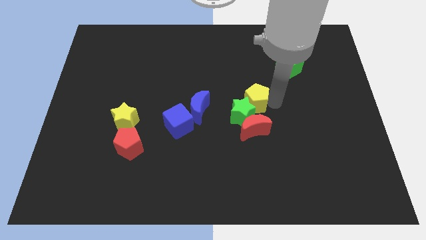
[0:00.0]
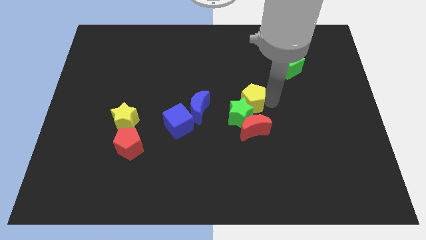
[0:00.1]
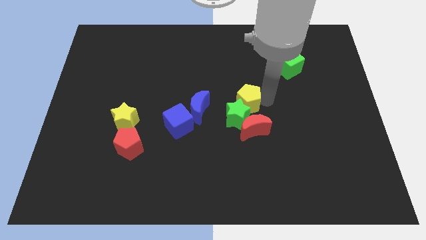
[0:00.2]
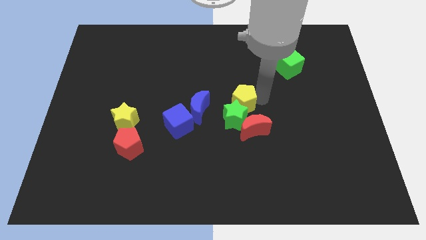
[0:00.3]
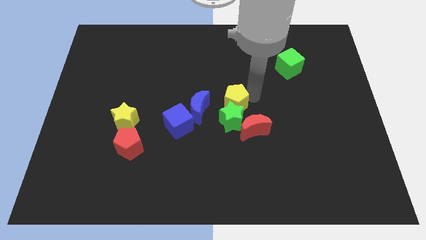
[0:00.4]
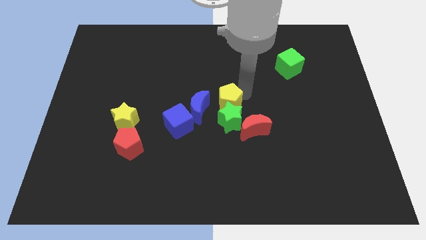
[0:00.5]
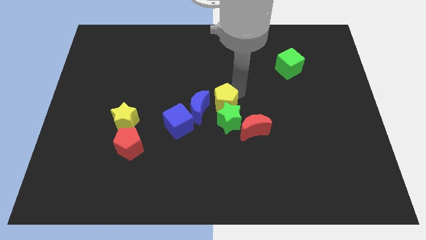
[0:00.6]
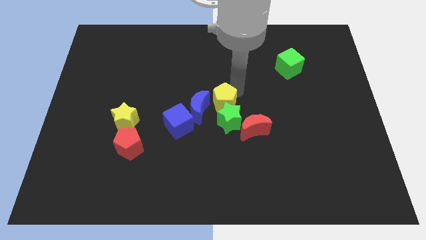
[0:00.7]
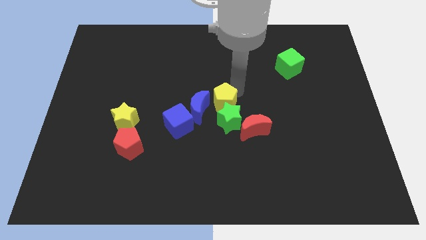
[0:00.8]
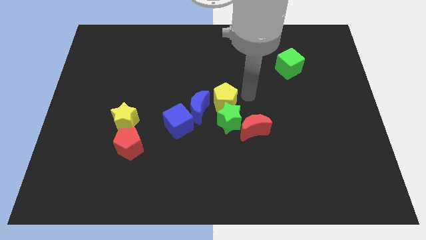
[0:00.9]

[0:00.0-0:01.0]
place the yellow pentagon close to the blue crescent

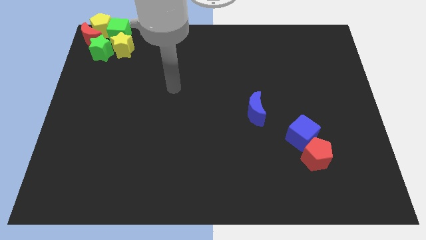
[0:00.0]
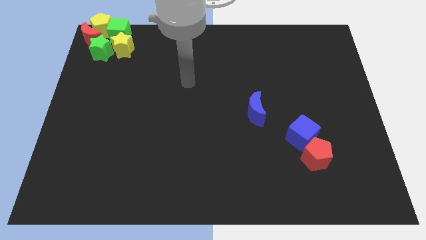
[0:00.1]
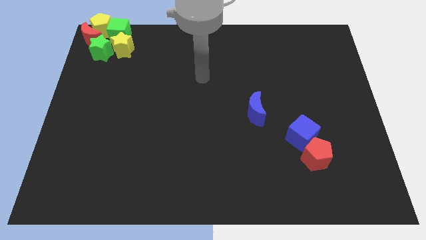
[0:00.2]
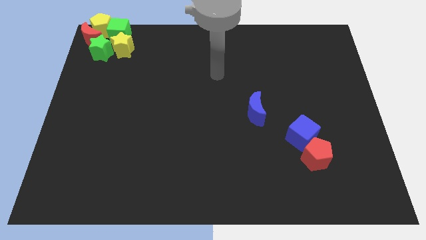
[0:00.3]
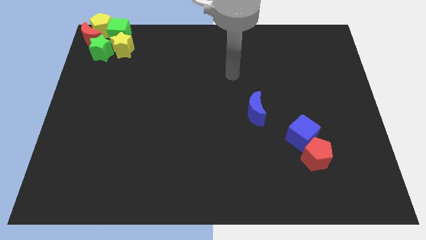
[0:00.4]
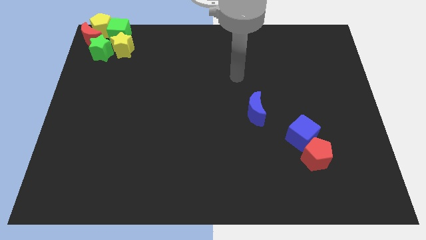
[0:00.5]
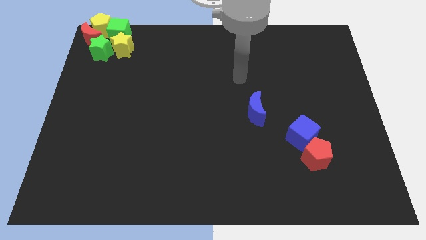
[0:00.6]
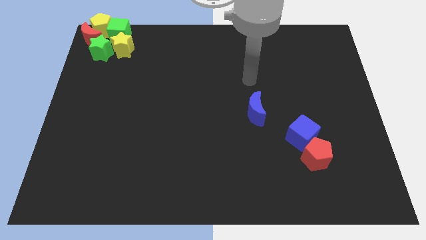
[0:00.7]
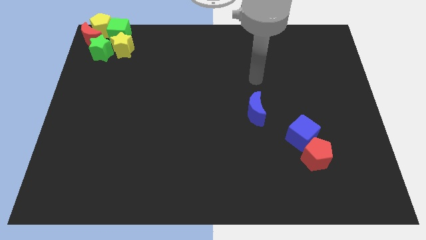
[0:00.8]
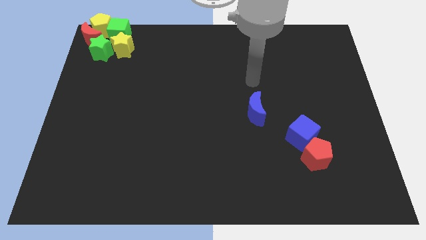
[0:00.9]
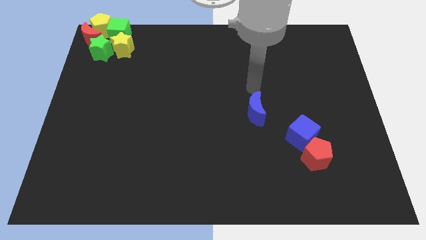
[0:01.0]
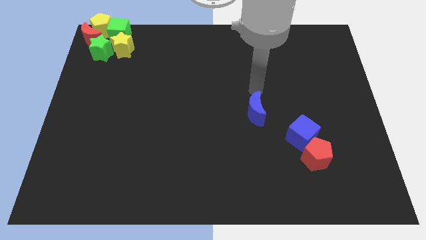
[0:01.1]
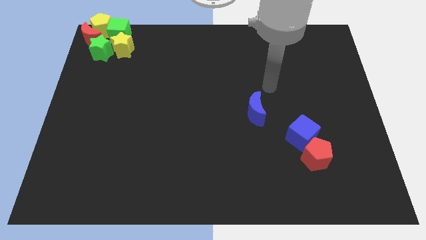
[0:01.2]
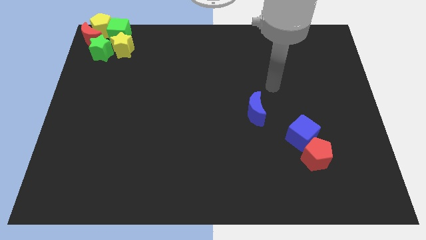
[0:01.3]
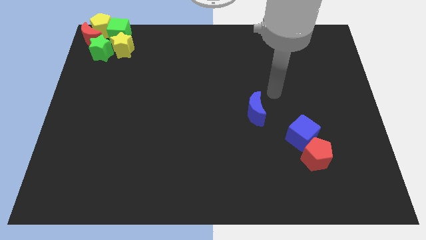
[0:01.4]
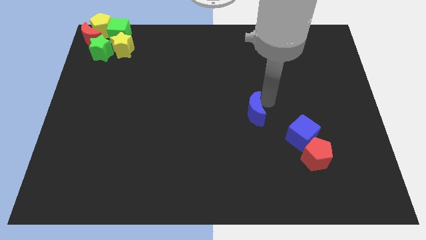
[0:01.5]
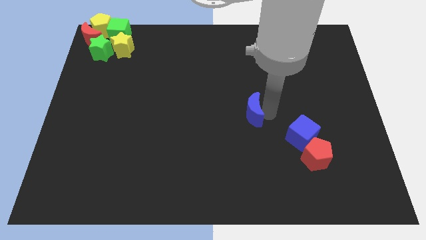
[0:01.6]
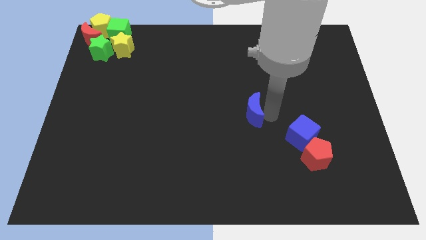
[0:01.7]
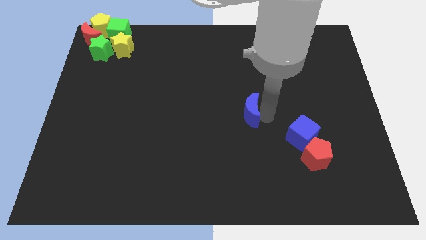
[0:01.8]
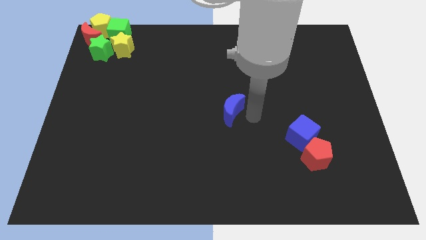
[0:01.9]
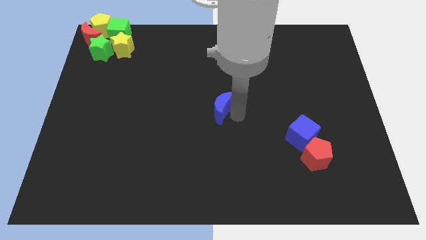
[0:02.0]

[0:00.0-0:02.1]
place the blue crescent at the center of the board

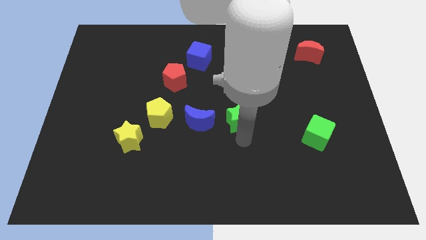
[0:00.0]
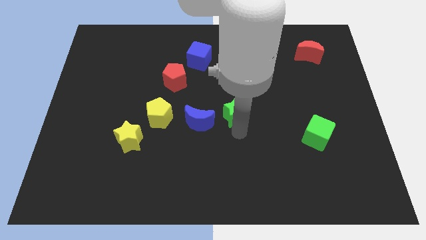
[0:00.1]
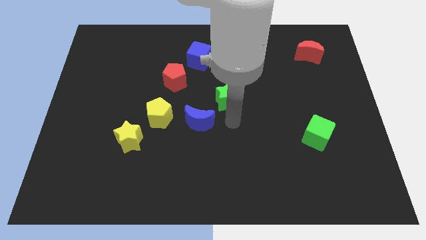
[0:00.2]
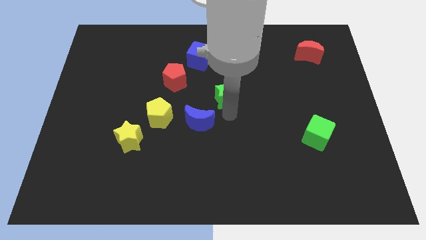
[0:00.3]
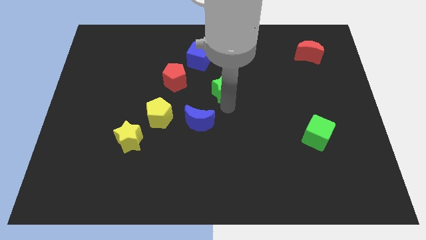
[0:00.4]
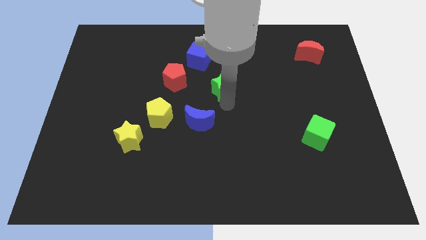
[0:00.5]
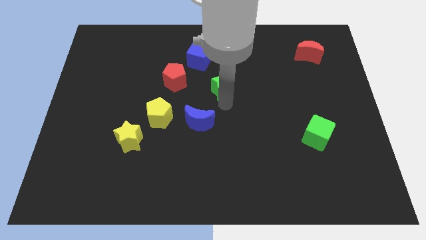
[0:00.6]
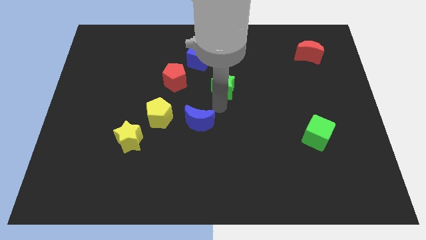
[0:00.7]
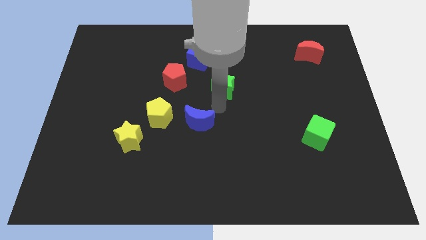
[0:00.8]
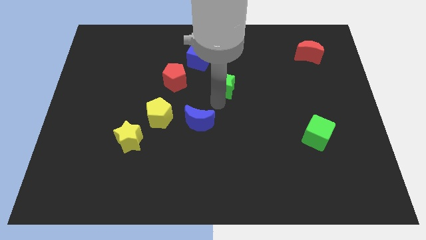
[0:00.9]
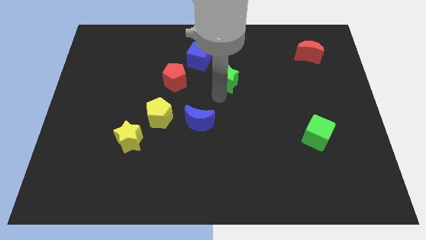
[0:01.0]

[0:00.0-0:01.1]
place the green star to the right of the red pentagon

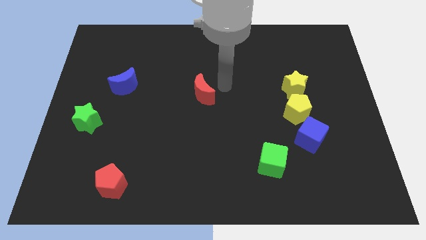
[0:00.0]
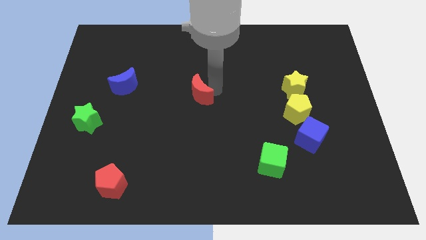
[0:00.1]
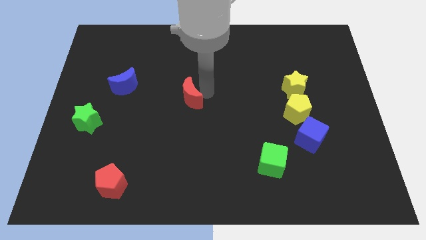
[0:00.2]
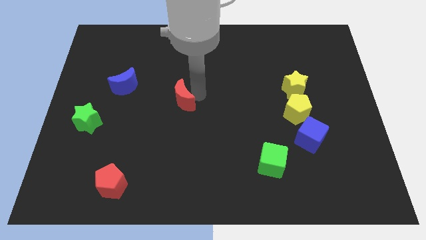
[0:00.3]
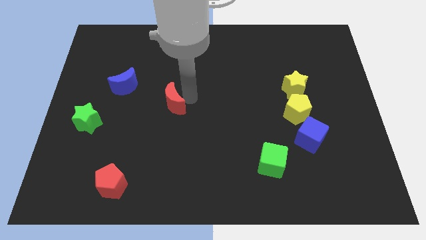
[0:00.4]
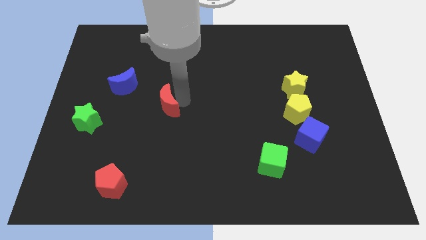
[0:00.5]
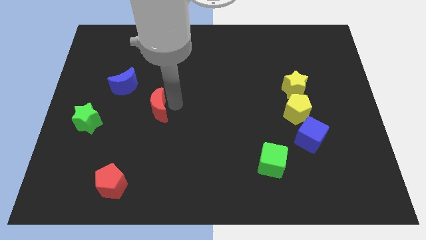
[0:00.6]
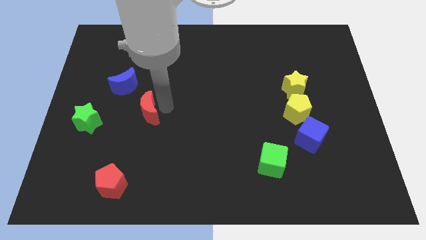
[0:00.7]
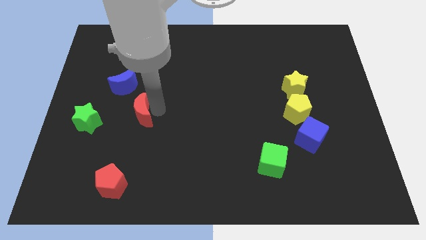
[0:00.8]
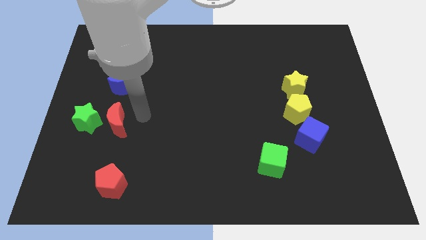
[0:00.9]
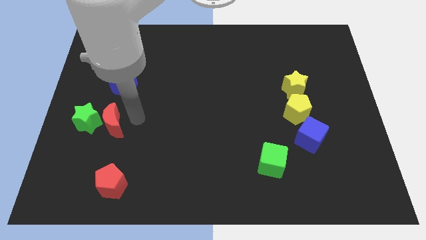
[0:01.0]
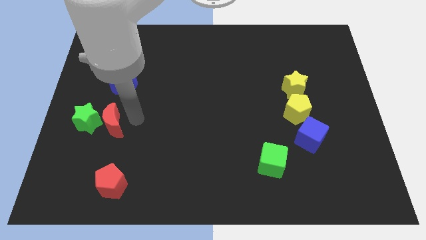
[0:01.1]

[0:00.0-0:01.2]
push the red crescent to the right of green star

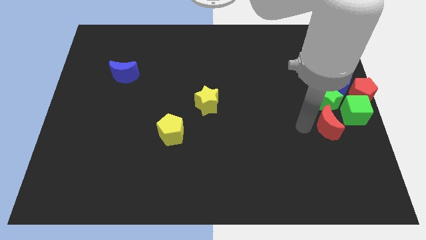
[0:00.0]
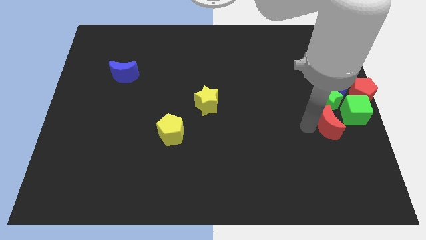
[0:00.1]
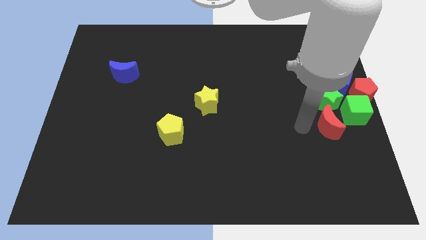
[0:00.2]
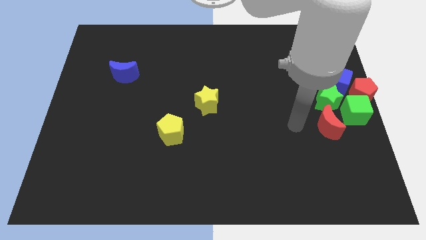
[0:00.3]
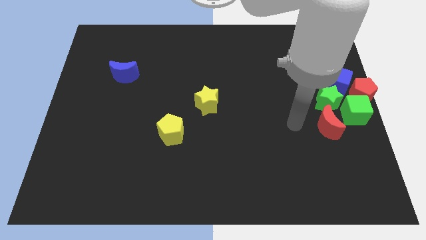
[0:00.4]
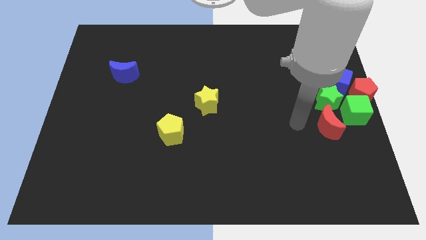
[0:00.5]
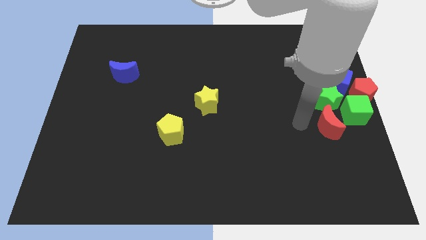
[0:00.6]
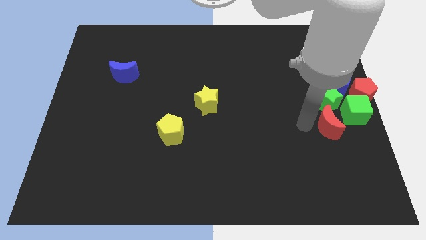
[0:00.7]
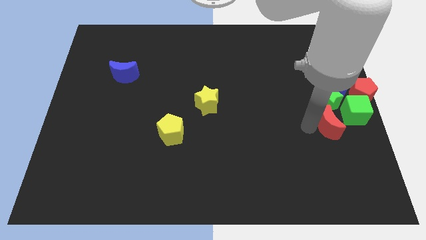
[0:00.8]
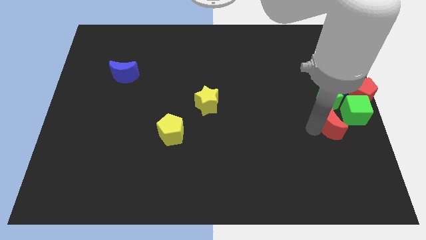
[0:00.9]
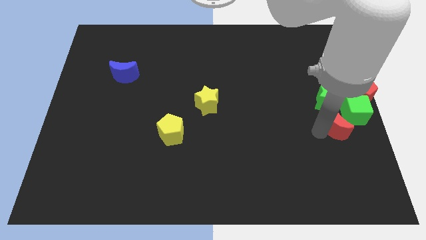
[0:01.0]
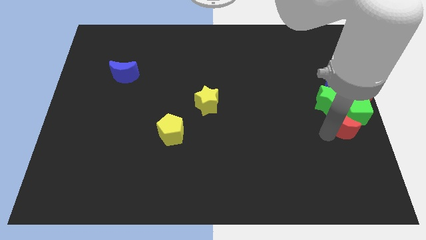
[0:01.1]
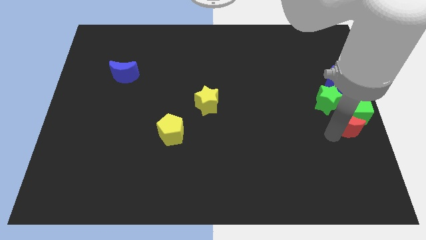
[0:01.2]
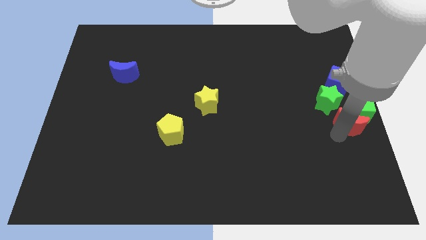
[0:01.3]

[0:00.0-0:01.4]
place red moon below green cube

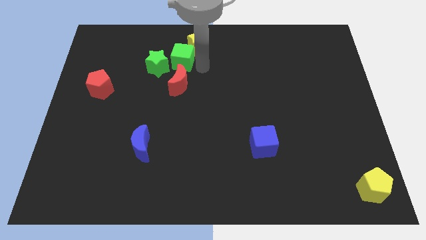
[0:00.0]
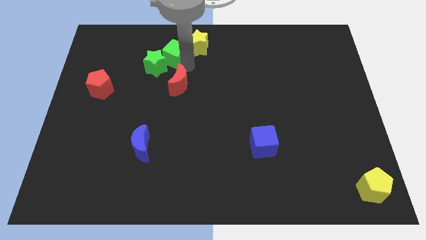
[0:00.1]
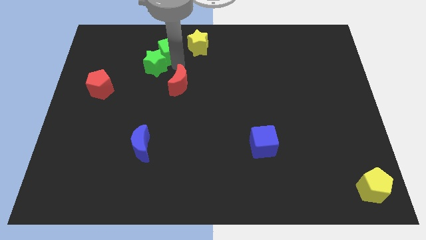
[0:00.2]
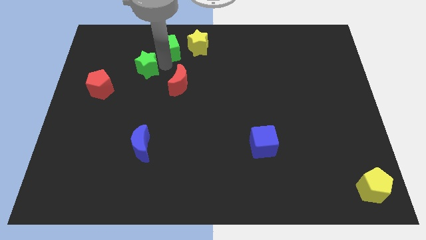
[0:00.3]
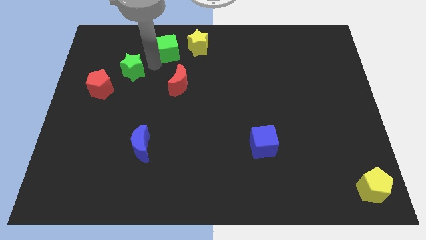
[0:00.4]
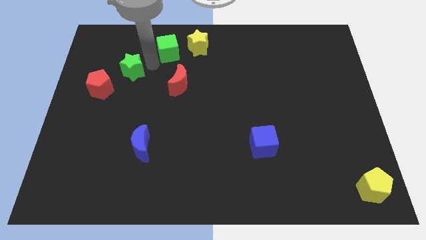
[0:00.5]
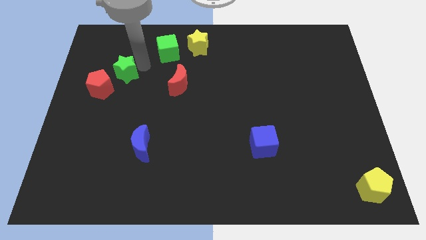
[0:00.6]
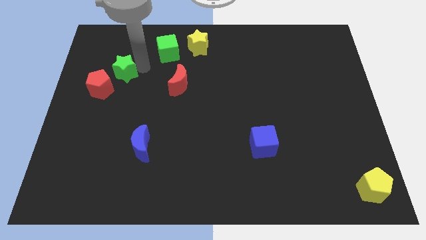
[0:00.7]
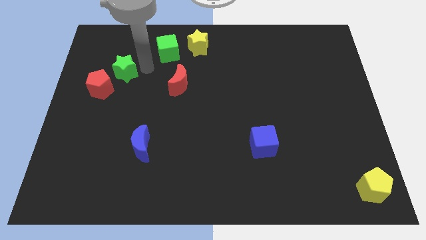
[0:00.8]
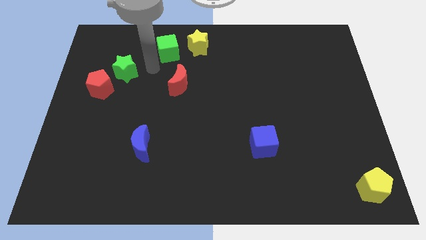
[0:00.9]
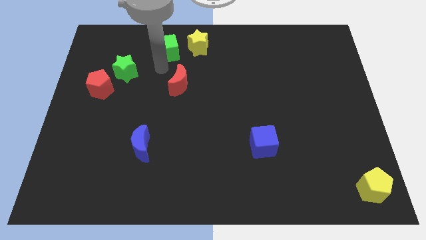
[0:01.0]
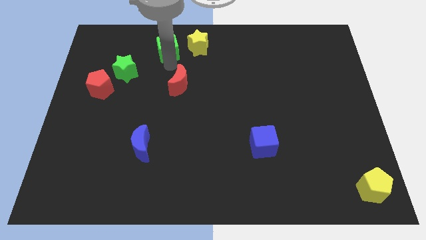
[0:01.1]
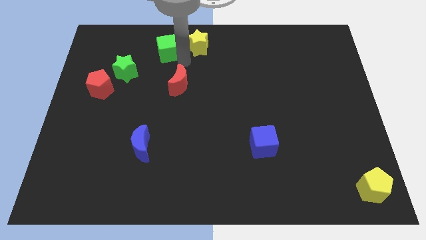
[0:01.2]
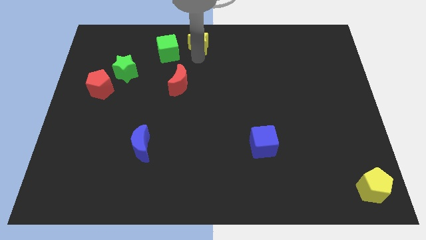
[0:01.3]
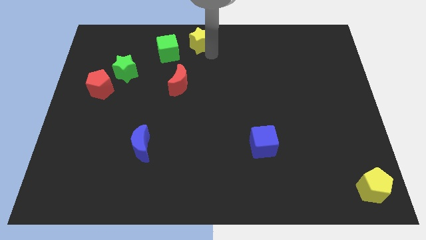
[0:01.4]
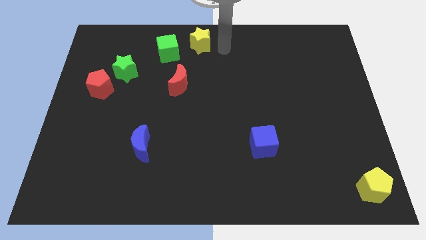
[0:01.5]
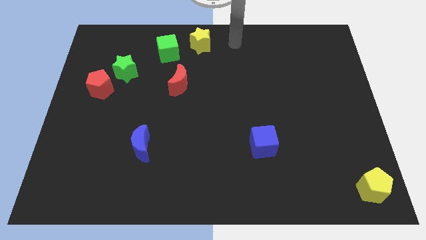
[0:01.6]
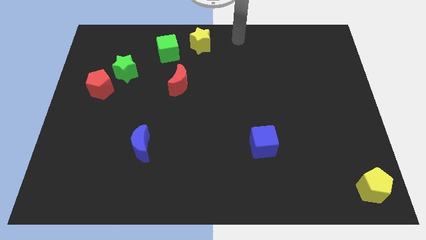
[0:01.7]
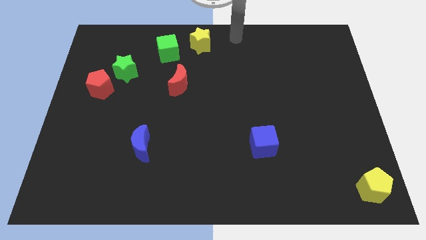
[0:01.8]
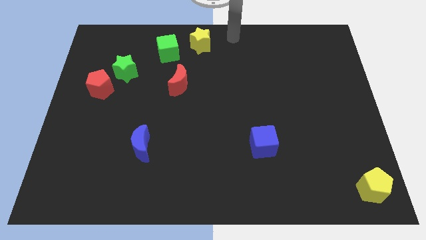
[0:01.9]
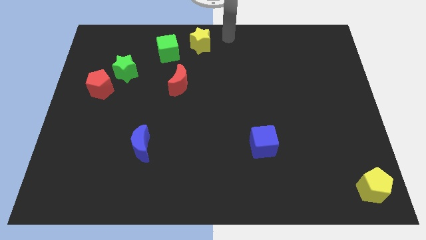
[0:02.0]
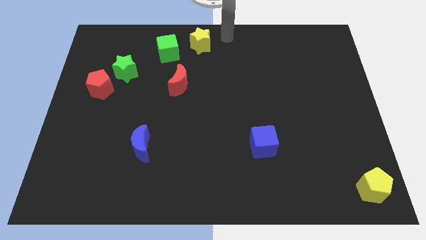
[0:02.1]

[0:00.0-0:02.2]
place the green star in between the green cube and red pentagon
